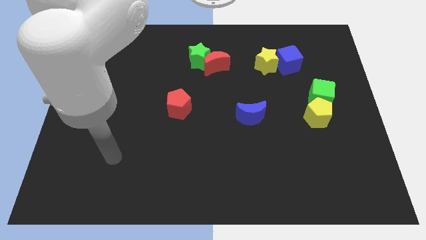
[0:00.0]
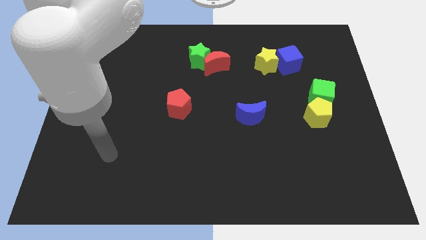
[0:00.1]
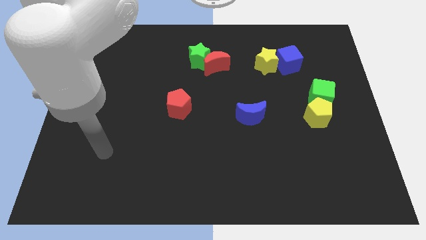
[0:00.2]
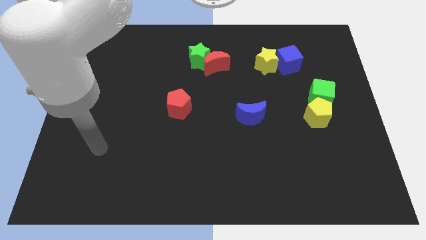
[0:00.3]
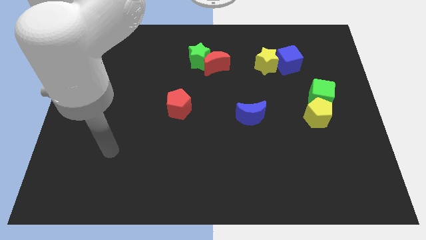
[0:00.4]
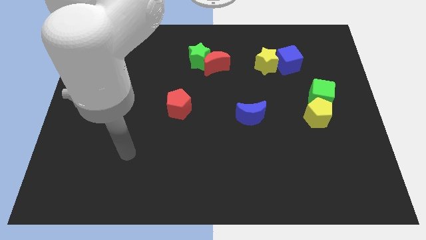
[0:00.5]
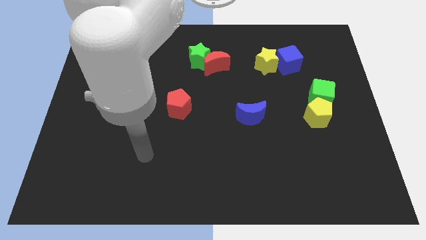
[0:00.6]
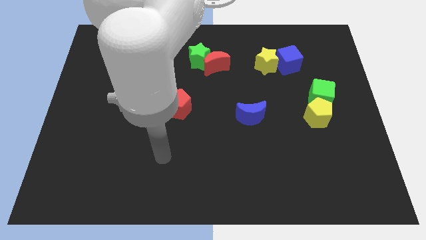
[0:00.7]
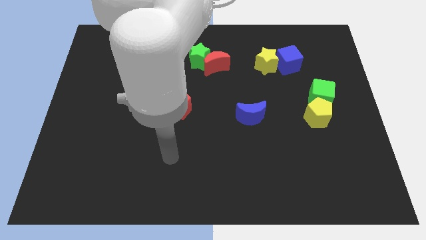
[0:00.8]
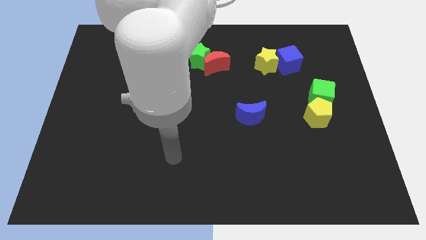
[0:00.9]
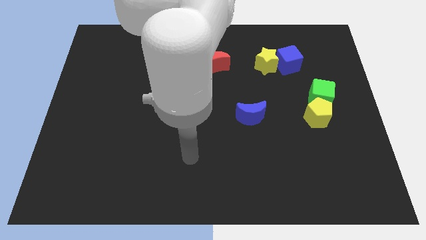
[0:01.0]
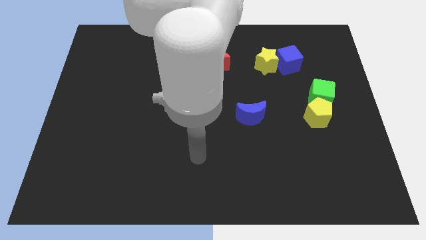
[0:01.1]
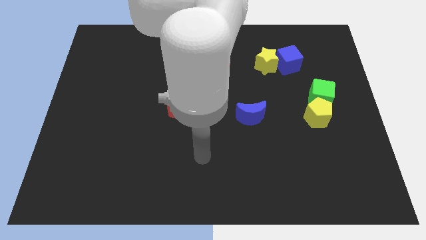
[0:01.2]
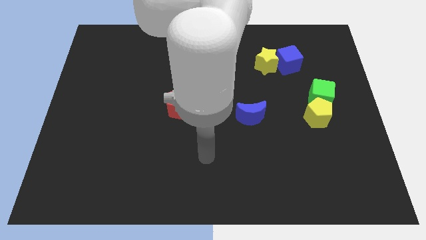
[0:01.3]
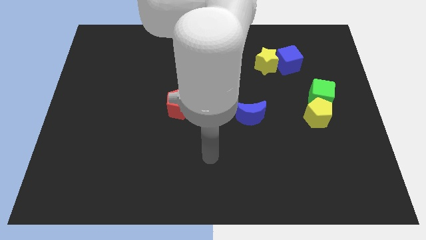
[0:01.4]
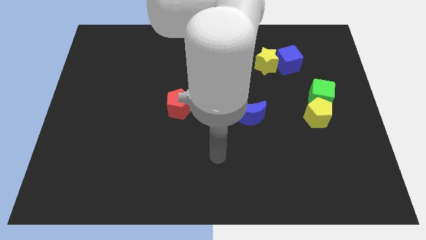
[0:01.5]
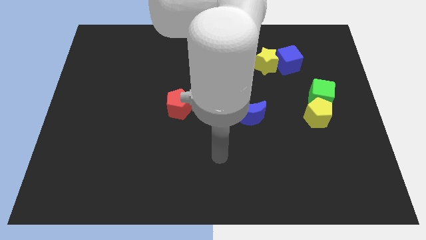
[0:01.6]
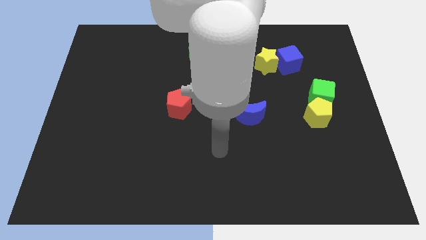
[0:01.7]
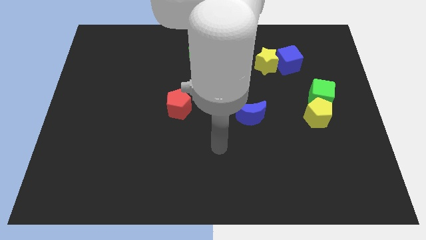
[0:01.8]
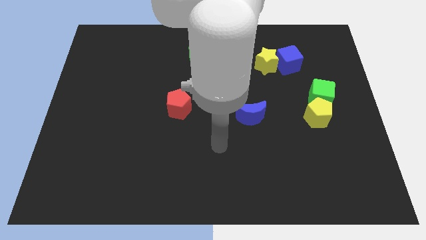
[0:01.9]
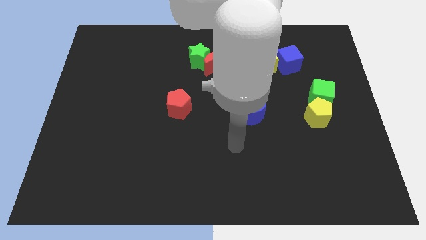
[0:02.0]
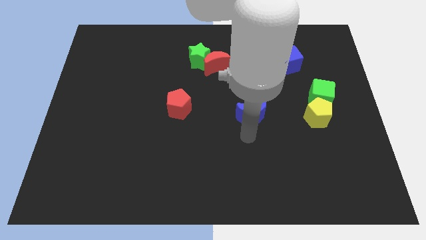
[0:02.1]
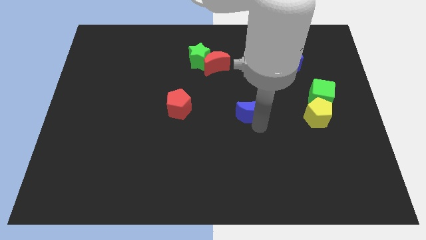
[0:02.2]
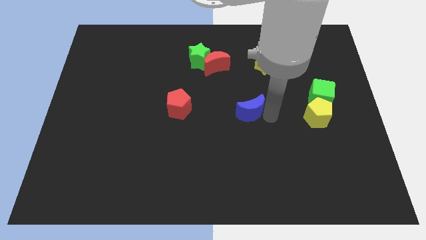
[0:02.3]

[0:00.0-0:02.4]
move your arm to the bottom of blue moon

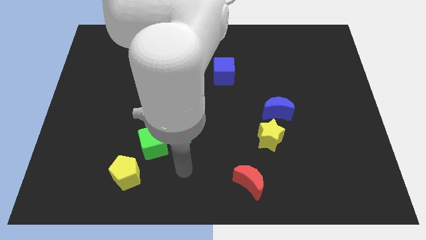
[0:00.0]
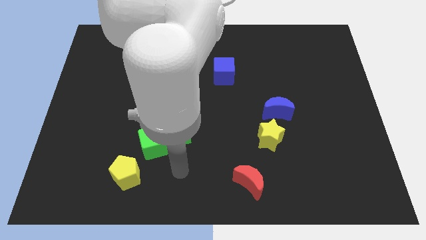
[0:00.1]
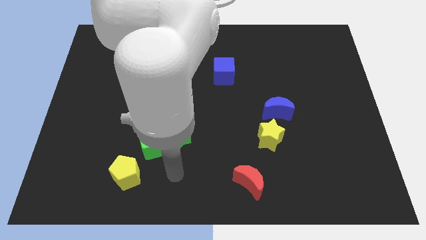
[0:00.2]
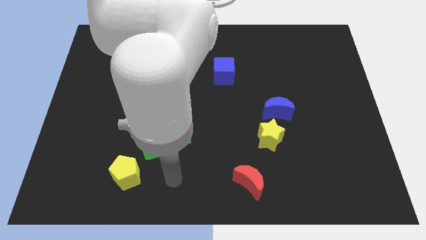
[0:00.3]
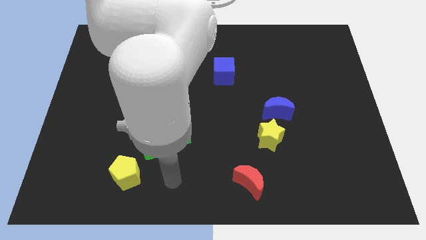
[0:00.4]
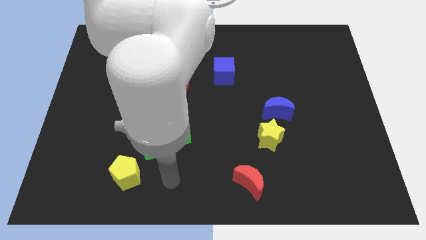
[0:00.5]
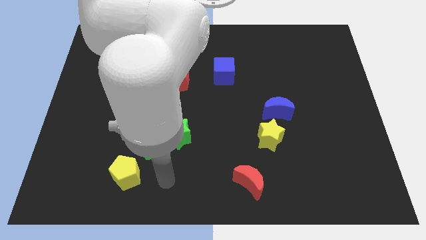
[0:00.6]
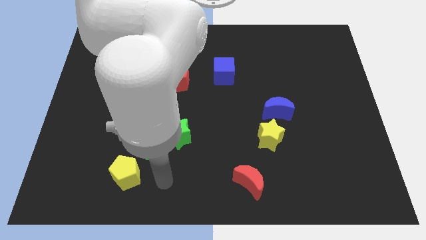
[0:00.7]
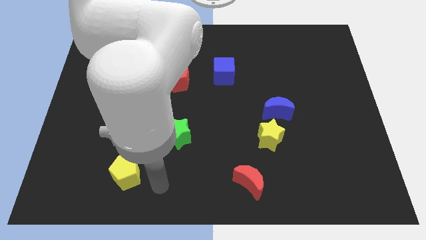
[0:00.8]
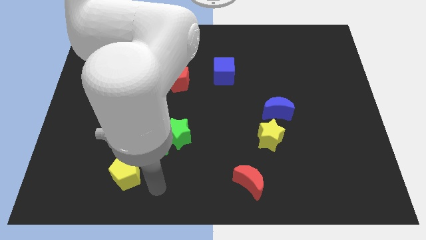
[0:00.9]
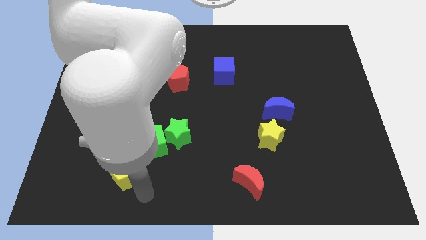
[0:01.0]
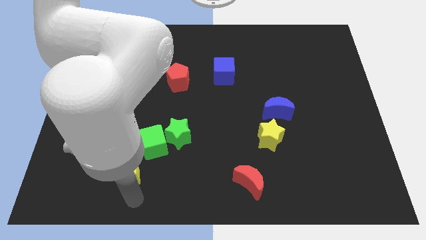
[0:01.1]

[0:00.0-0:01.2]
move your arm towards bottom center

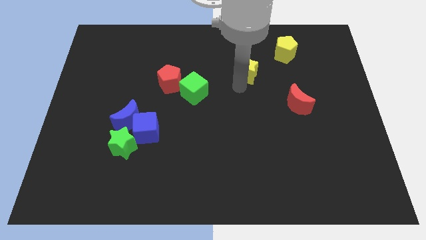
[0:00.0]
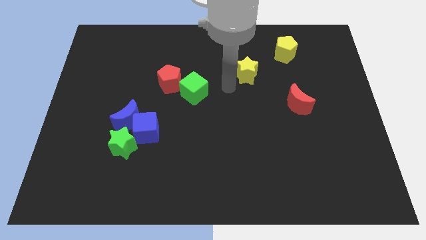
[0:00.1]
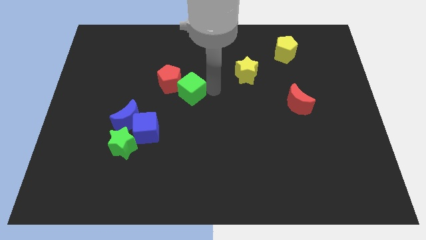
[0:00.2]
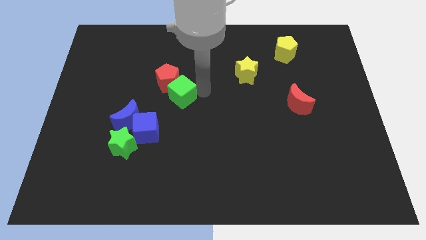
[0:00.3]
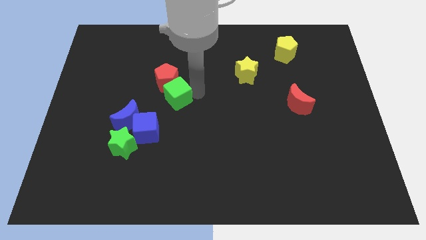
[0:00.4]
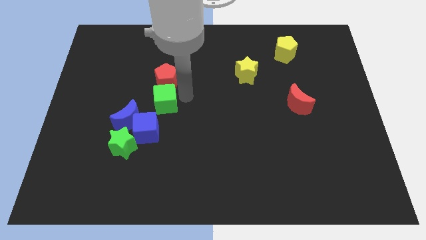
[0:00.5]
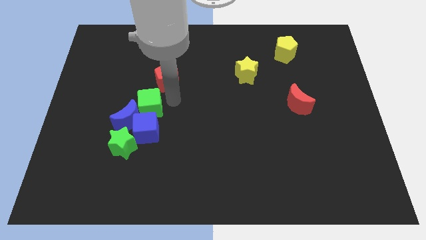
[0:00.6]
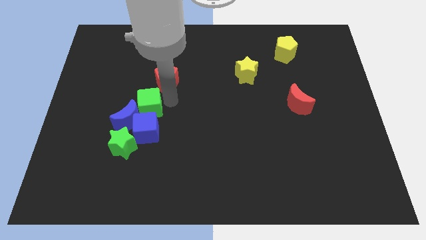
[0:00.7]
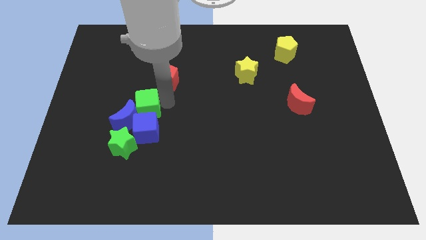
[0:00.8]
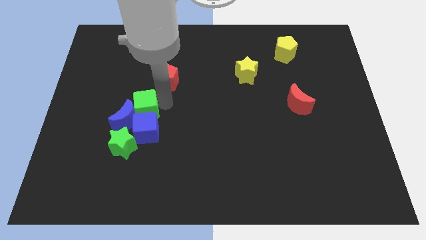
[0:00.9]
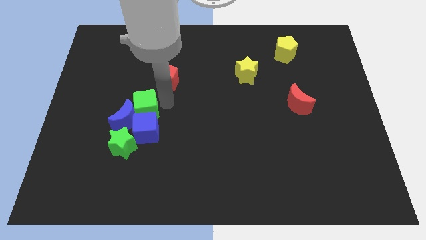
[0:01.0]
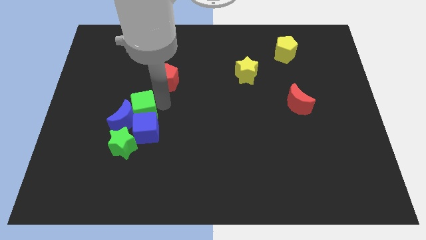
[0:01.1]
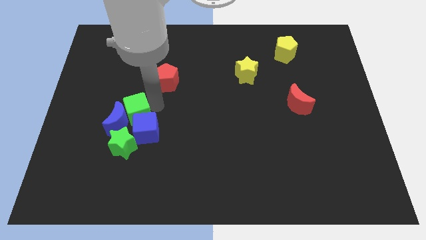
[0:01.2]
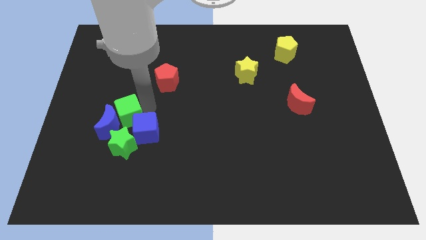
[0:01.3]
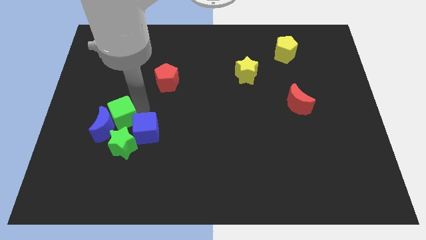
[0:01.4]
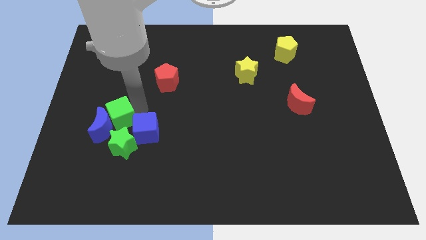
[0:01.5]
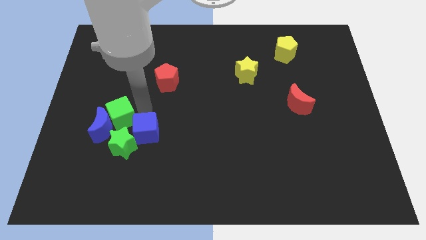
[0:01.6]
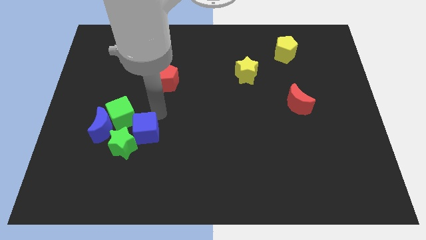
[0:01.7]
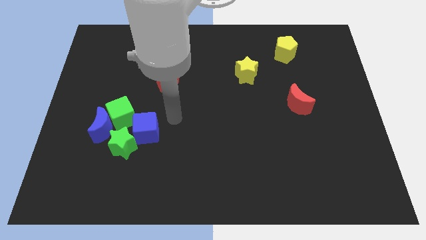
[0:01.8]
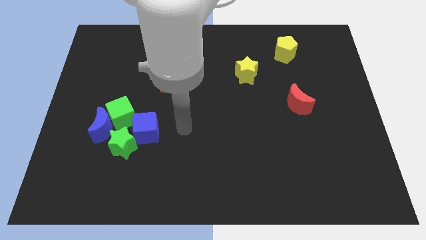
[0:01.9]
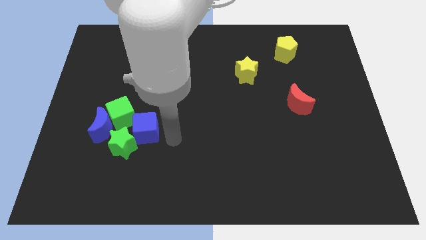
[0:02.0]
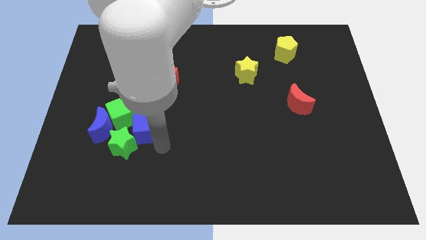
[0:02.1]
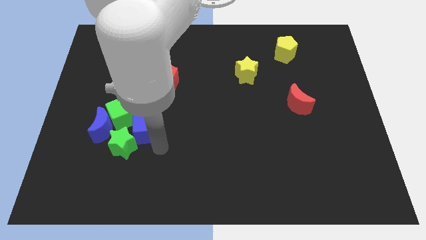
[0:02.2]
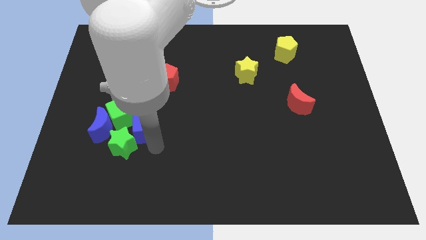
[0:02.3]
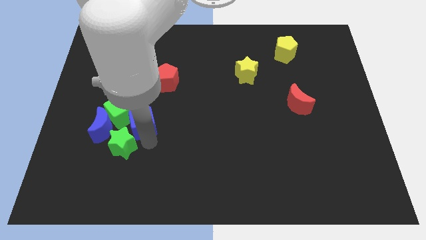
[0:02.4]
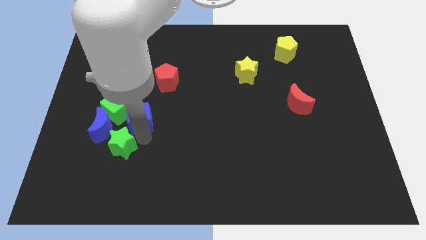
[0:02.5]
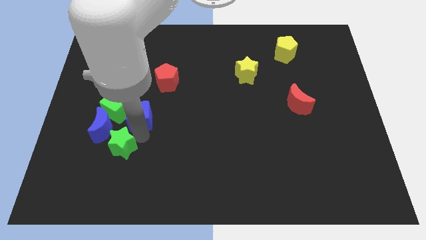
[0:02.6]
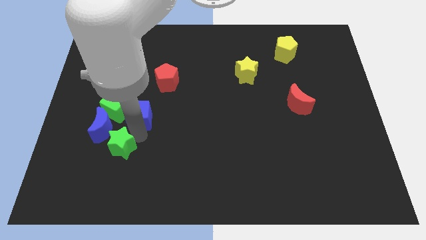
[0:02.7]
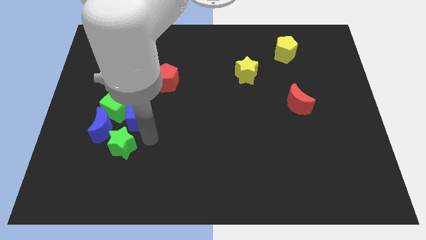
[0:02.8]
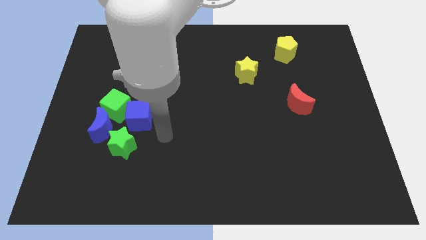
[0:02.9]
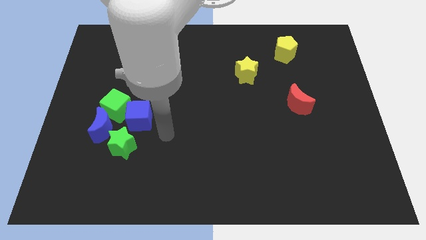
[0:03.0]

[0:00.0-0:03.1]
adjust green blocks and blue blocks close to each other

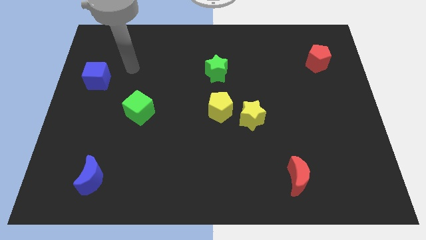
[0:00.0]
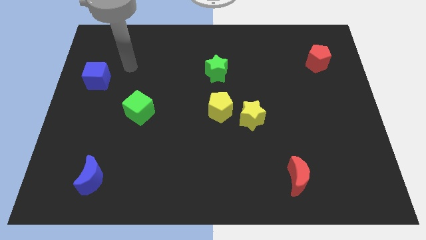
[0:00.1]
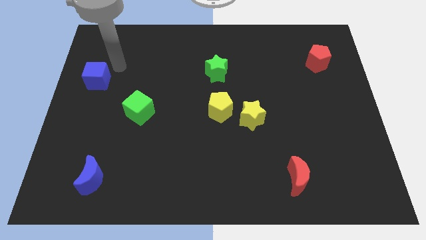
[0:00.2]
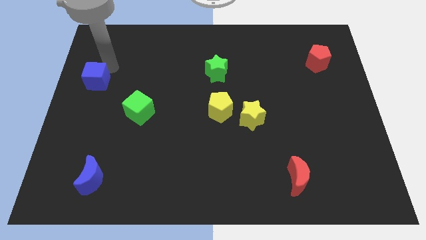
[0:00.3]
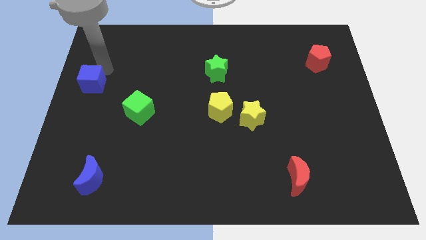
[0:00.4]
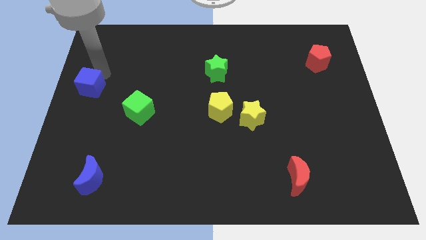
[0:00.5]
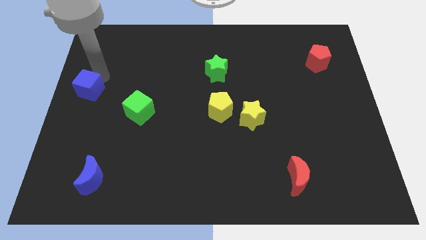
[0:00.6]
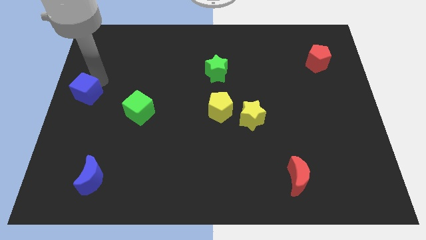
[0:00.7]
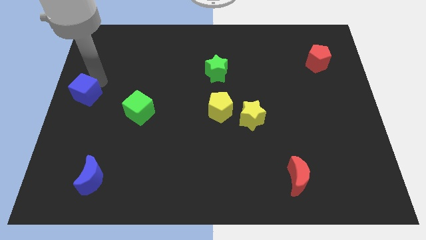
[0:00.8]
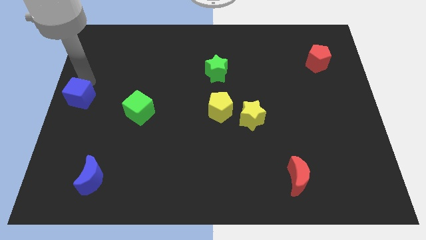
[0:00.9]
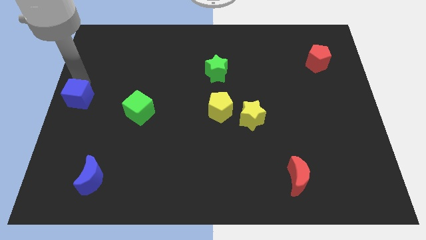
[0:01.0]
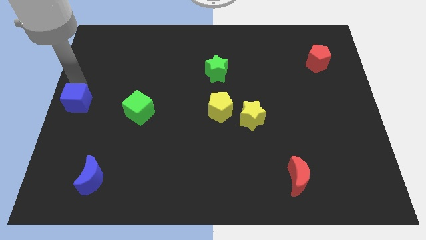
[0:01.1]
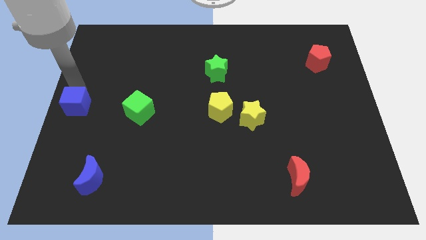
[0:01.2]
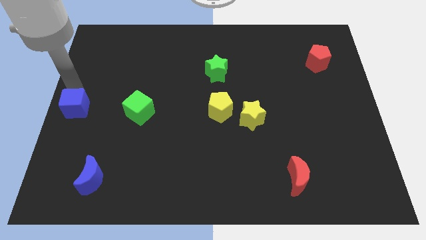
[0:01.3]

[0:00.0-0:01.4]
place the blue cube to the center left side of the board

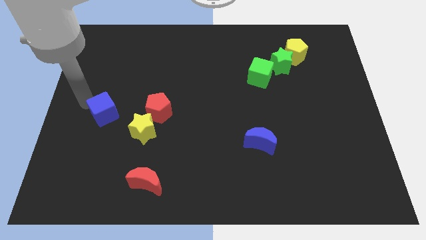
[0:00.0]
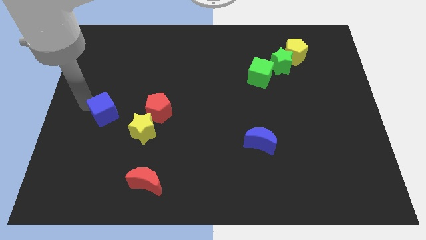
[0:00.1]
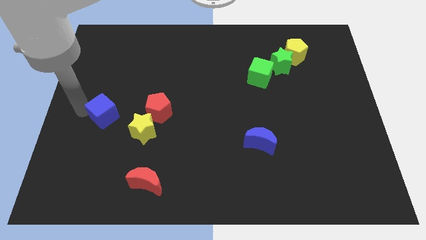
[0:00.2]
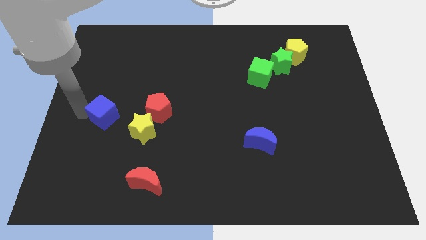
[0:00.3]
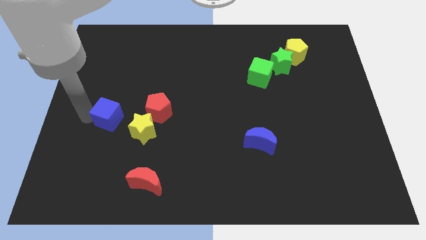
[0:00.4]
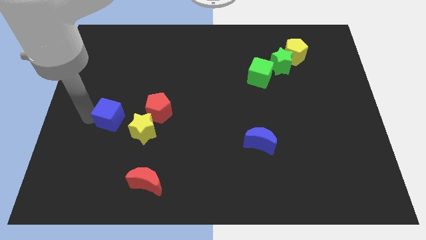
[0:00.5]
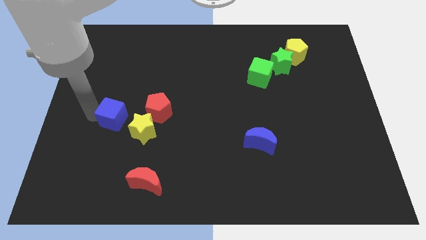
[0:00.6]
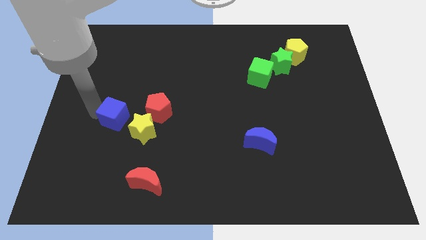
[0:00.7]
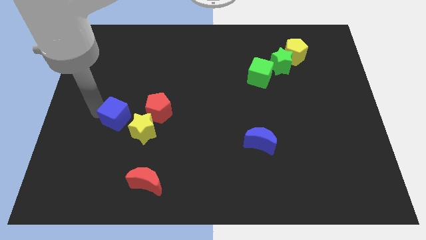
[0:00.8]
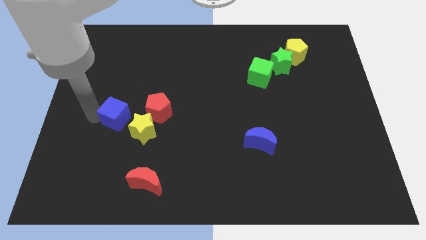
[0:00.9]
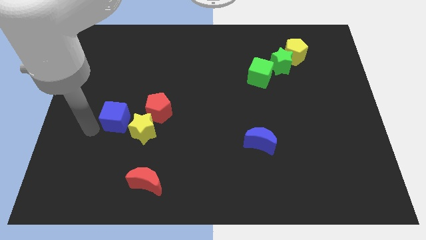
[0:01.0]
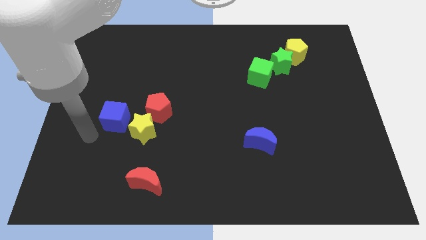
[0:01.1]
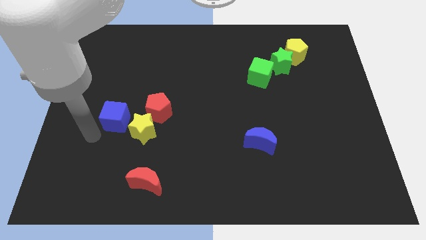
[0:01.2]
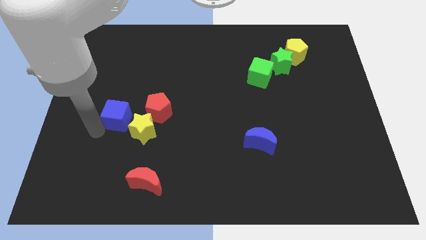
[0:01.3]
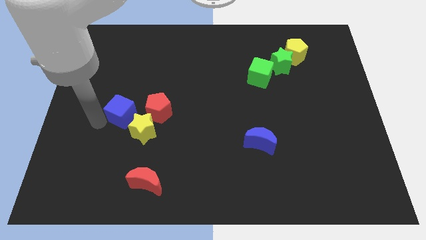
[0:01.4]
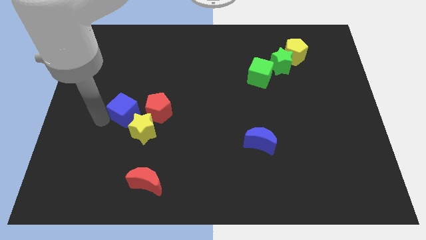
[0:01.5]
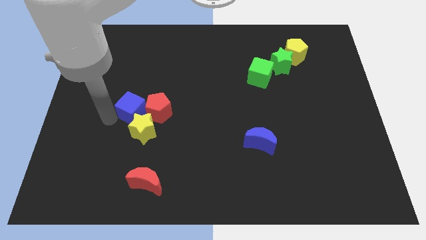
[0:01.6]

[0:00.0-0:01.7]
push the blue cube into the red pentagon
